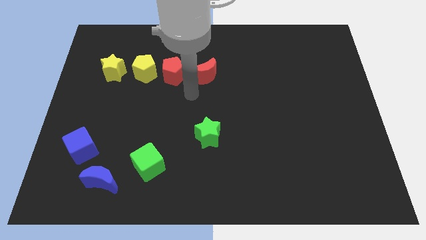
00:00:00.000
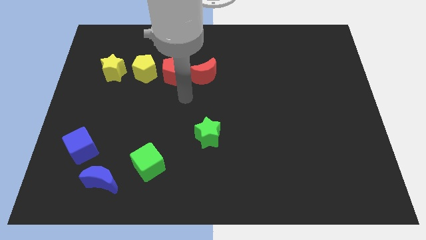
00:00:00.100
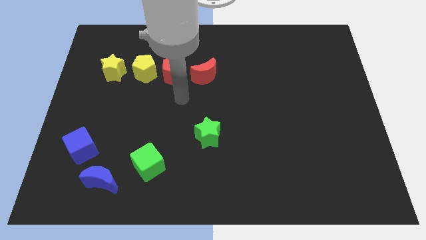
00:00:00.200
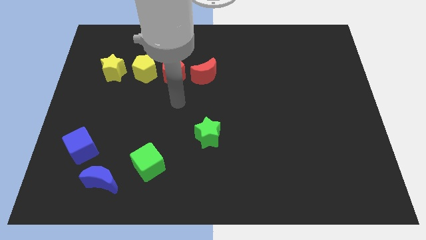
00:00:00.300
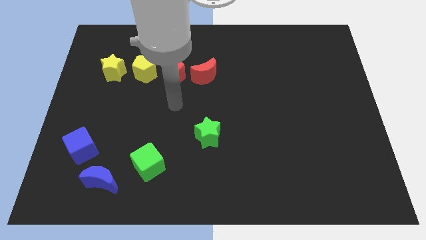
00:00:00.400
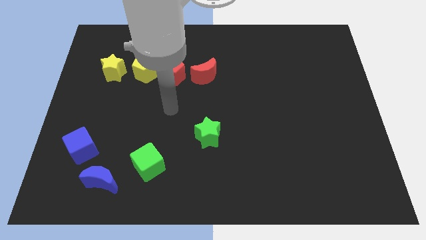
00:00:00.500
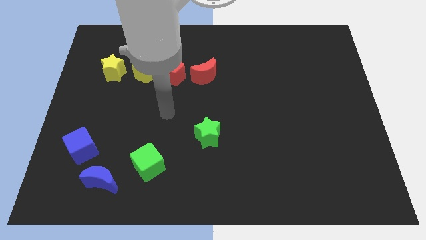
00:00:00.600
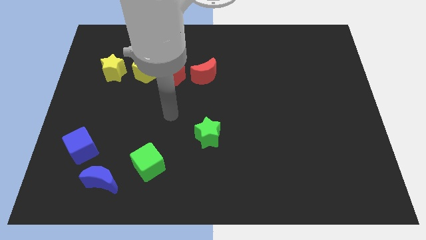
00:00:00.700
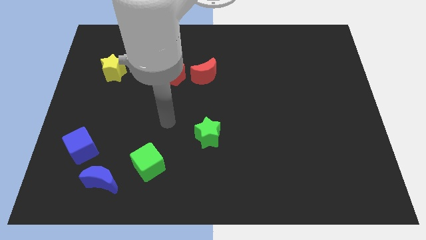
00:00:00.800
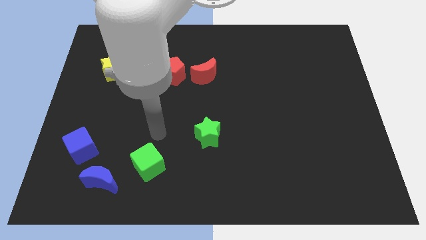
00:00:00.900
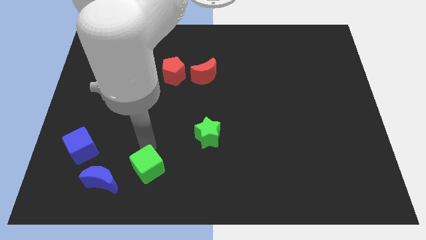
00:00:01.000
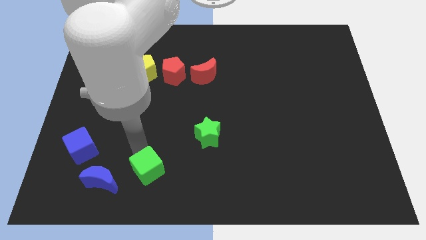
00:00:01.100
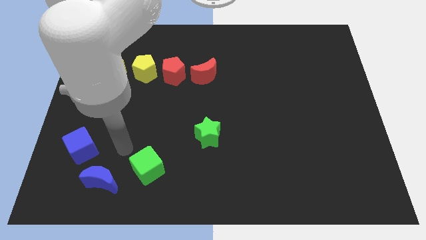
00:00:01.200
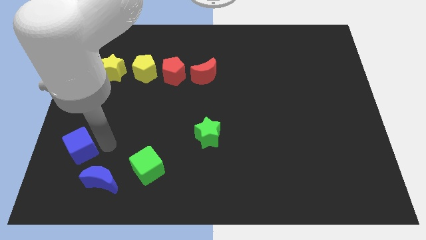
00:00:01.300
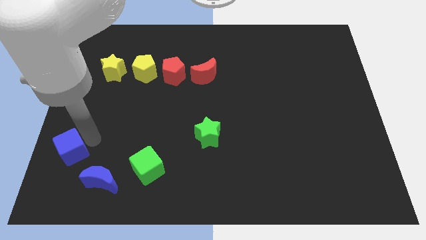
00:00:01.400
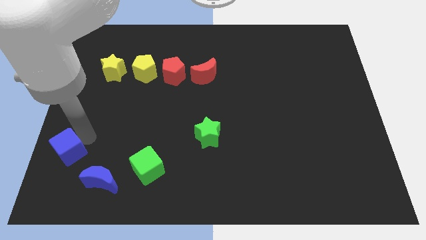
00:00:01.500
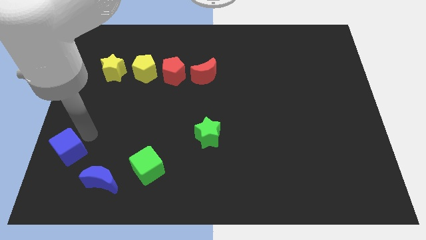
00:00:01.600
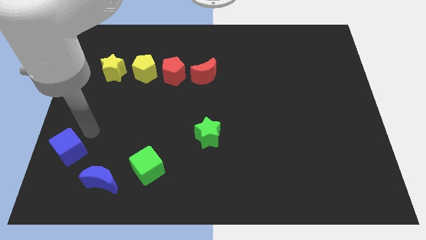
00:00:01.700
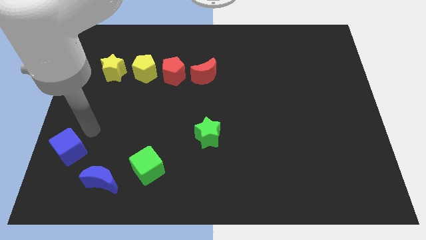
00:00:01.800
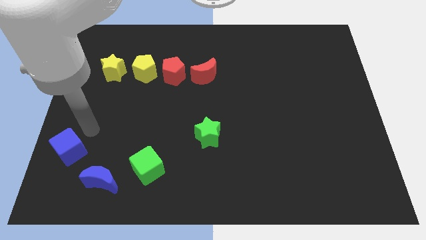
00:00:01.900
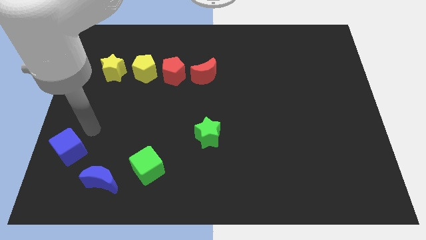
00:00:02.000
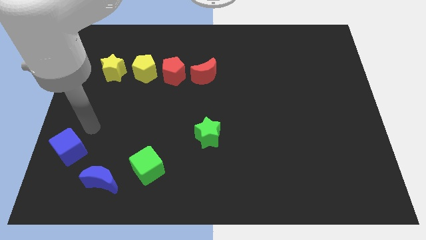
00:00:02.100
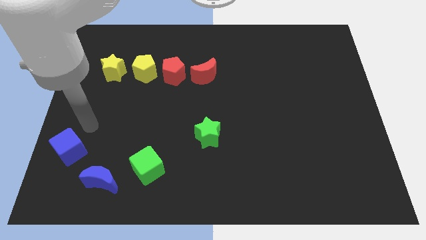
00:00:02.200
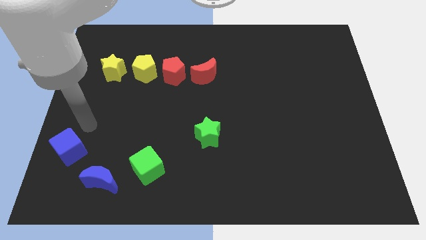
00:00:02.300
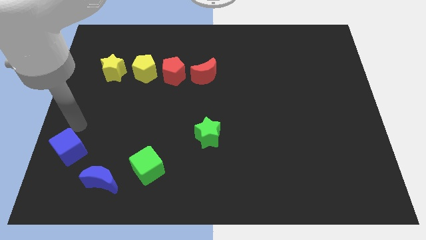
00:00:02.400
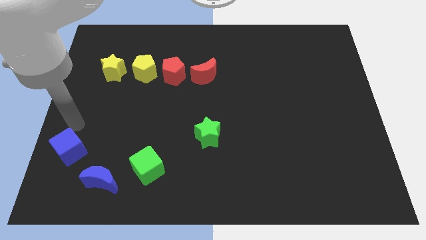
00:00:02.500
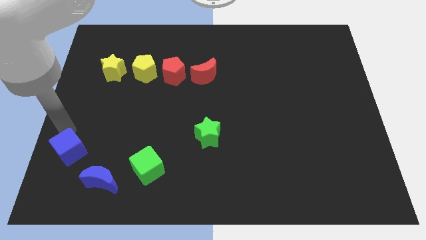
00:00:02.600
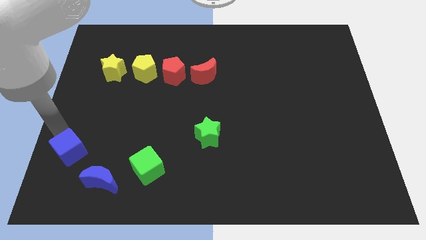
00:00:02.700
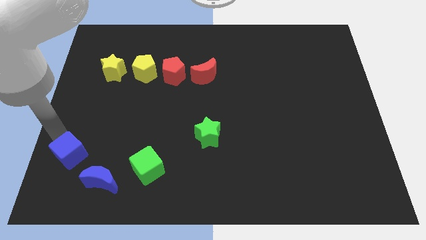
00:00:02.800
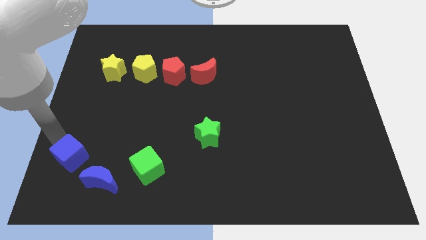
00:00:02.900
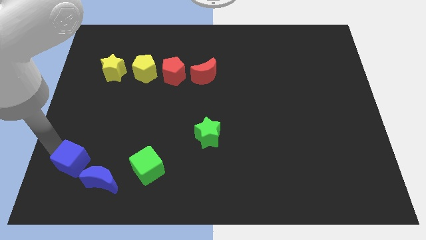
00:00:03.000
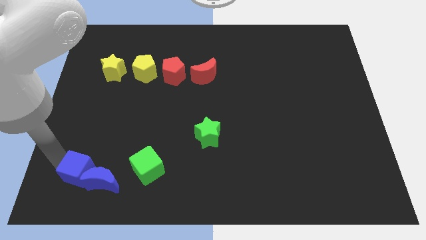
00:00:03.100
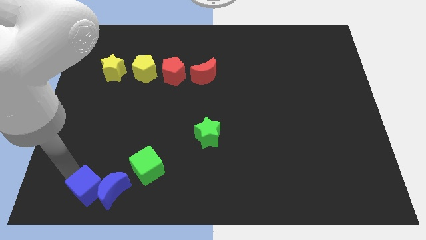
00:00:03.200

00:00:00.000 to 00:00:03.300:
push the blue cube left of the blue moon

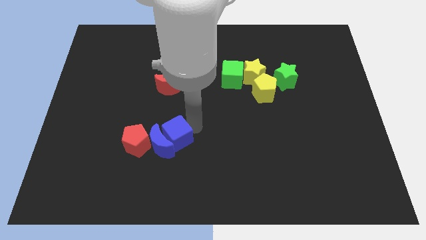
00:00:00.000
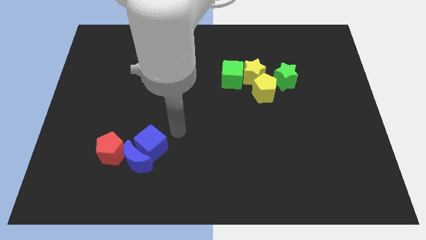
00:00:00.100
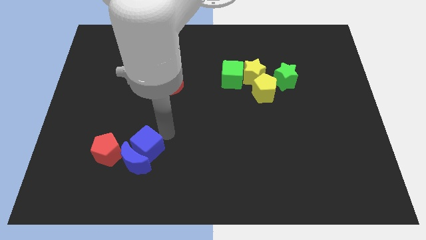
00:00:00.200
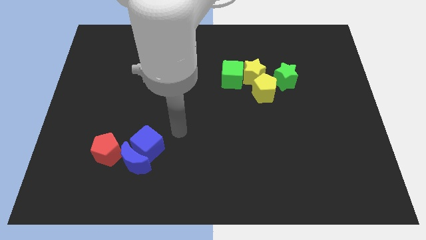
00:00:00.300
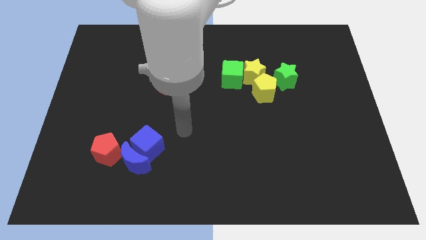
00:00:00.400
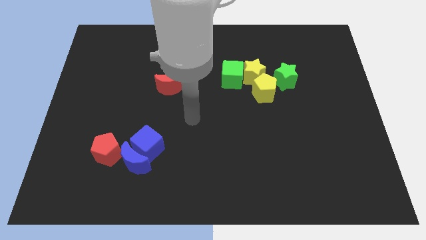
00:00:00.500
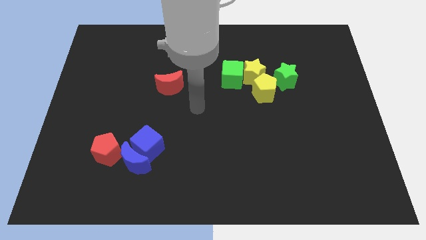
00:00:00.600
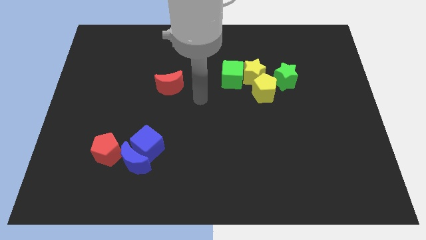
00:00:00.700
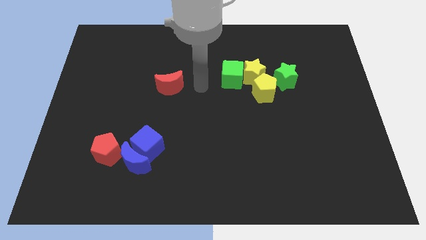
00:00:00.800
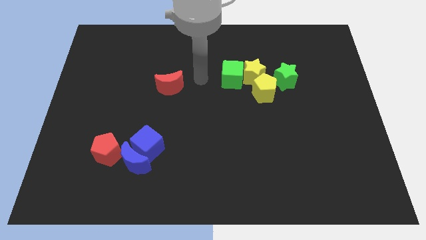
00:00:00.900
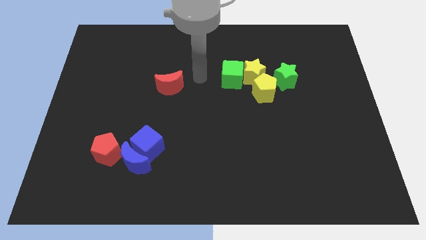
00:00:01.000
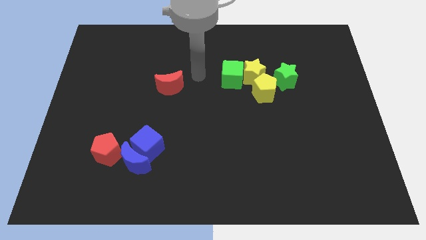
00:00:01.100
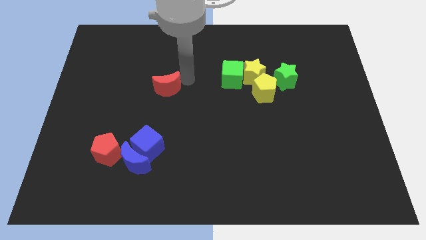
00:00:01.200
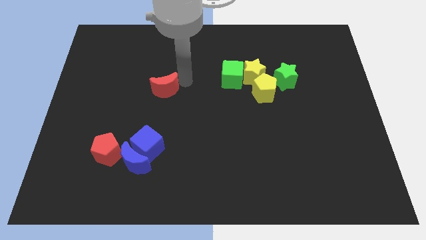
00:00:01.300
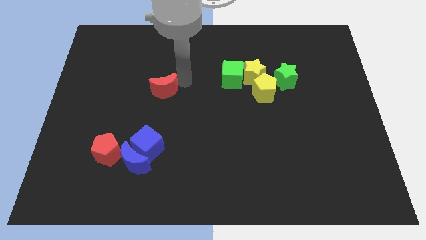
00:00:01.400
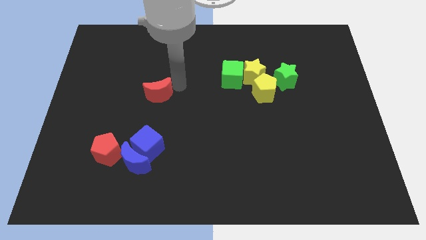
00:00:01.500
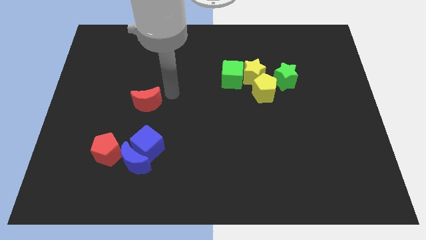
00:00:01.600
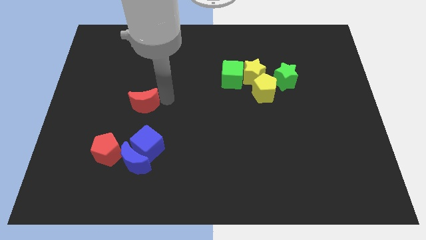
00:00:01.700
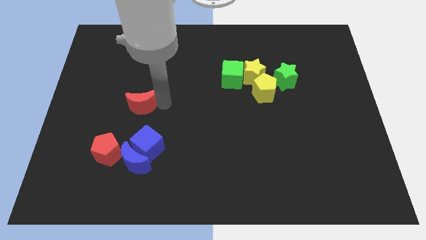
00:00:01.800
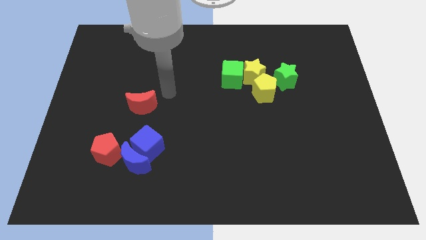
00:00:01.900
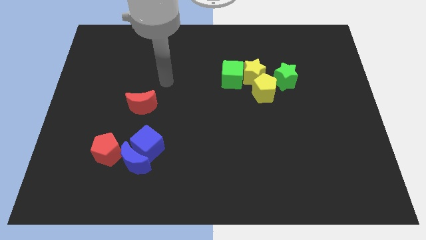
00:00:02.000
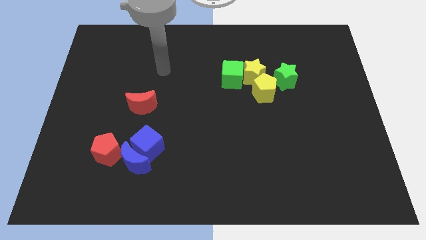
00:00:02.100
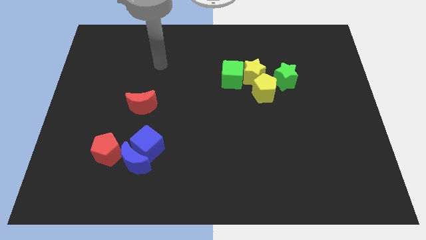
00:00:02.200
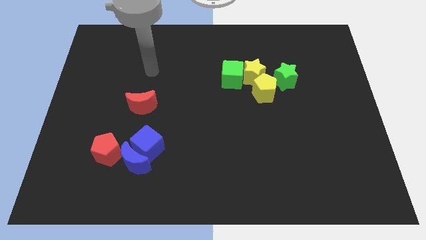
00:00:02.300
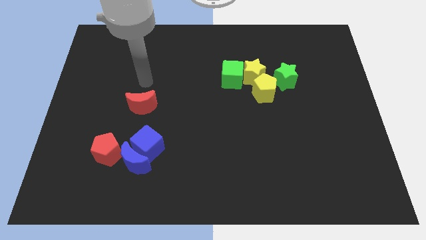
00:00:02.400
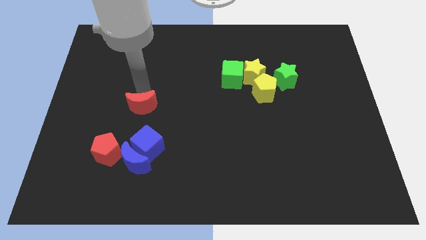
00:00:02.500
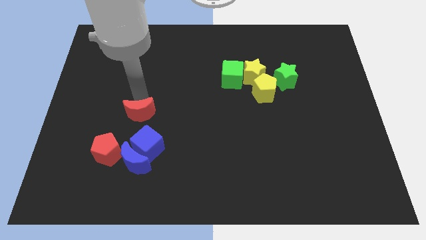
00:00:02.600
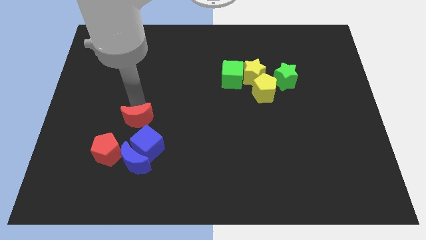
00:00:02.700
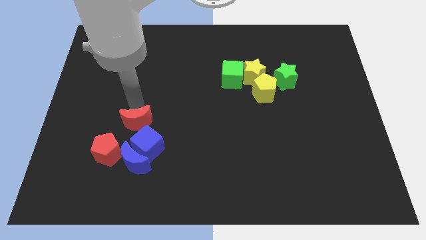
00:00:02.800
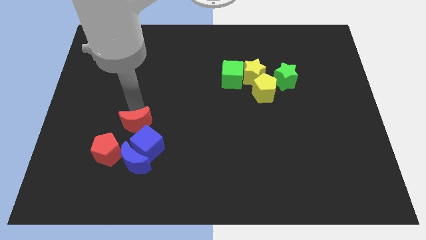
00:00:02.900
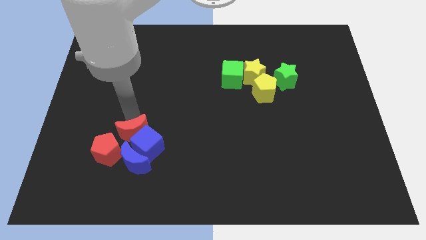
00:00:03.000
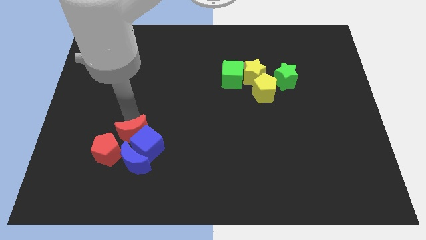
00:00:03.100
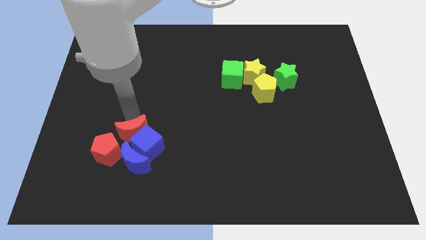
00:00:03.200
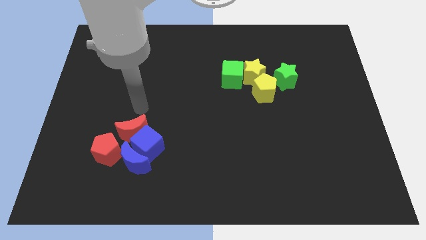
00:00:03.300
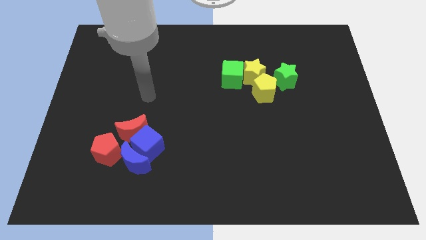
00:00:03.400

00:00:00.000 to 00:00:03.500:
push the red crescent close to the blue cube

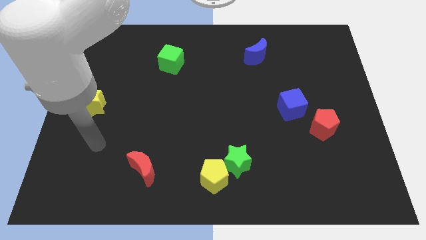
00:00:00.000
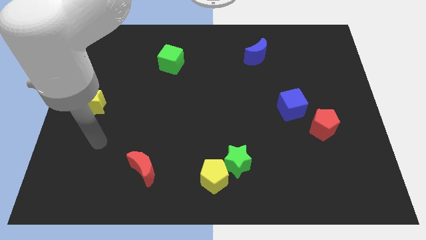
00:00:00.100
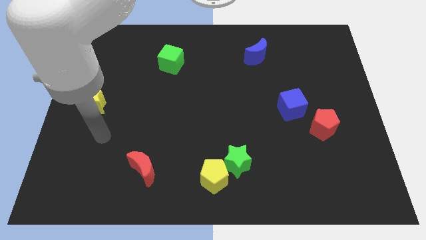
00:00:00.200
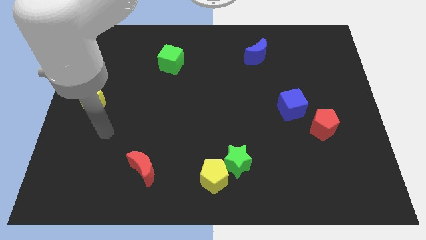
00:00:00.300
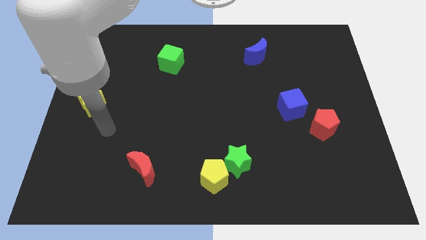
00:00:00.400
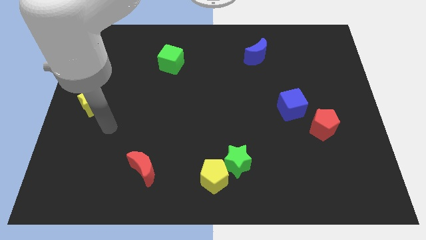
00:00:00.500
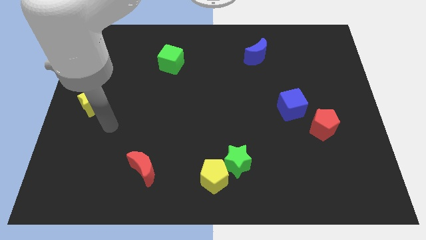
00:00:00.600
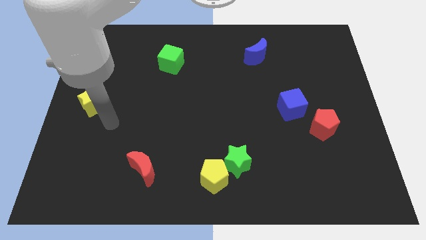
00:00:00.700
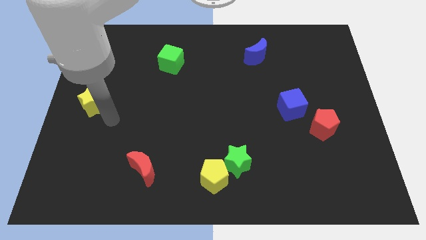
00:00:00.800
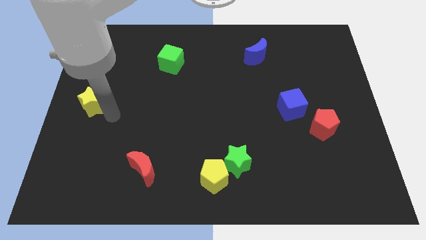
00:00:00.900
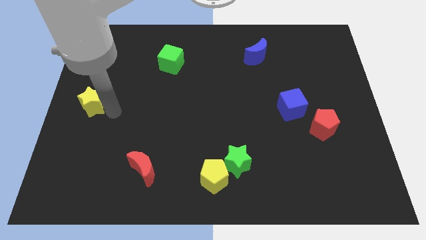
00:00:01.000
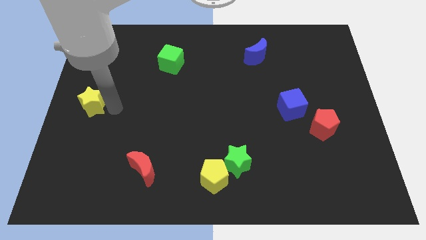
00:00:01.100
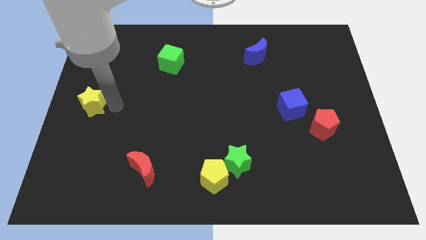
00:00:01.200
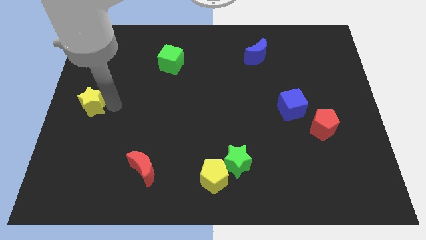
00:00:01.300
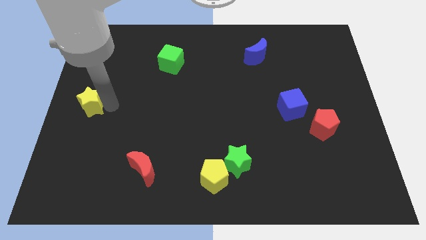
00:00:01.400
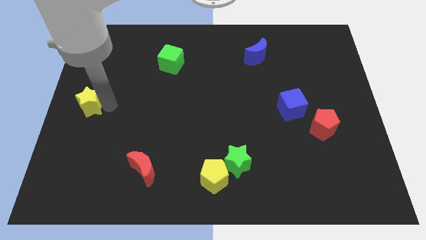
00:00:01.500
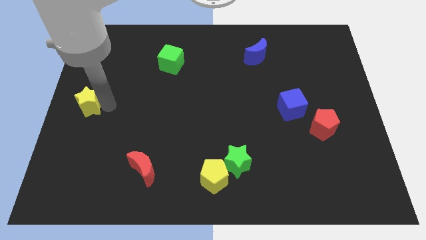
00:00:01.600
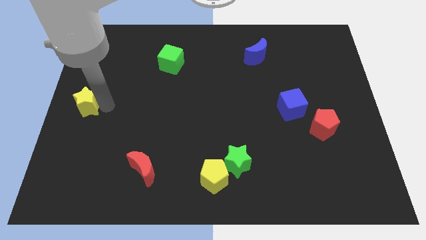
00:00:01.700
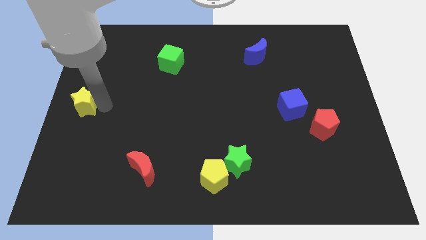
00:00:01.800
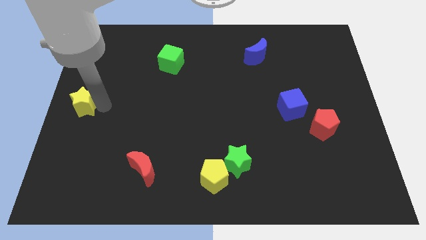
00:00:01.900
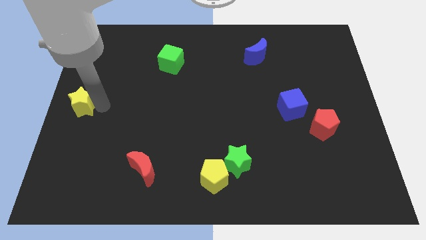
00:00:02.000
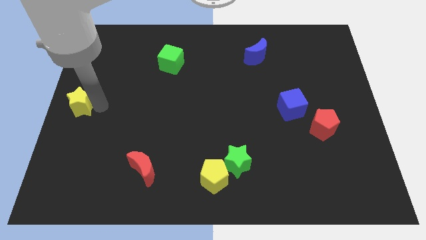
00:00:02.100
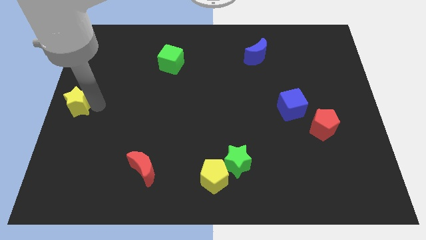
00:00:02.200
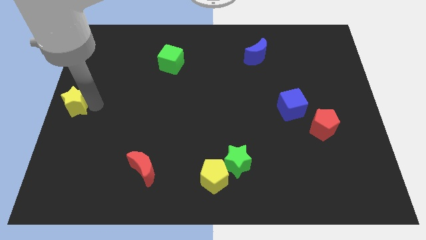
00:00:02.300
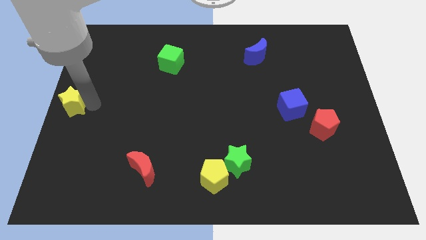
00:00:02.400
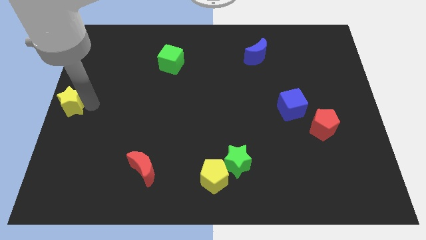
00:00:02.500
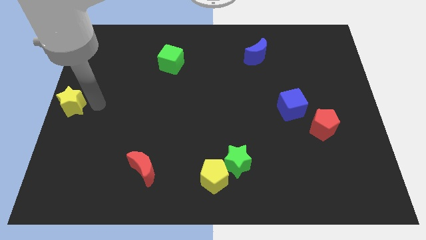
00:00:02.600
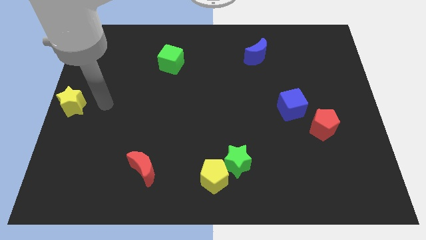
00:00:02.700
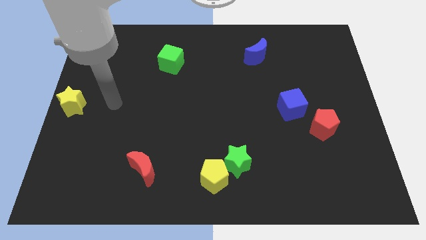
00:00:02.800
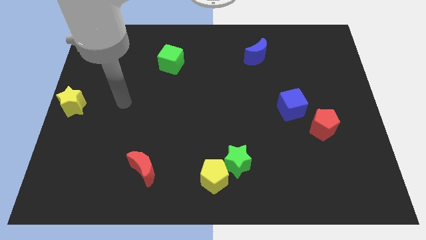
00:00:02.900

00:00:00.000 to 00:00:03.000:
move the yellow star left center of the board
